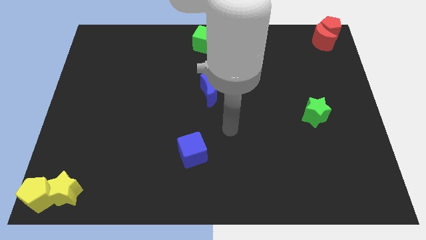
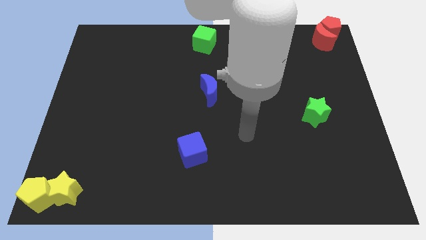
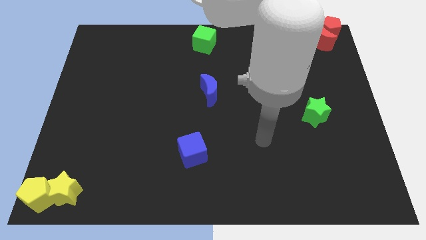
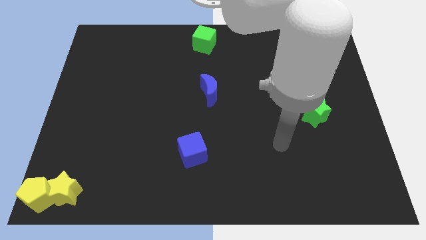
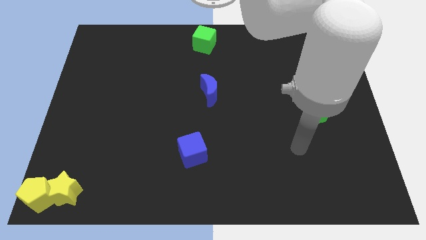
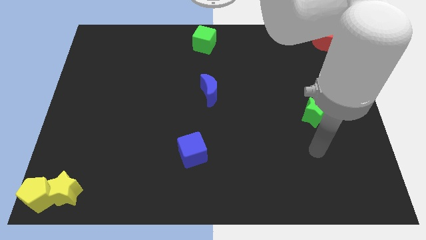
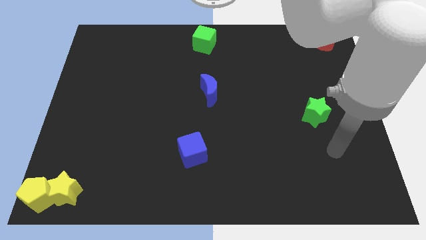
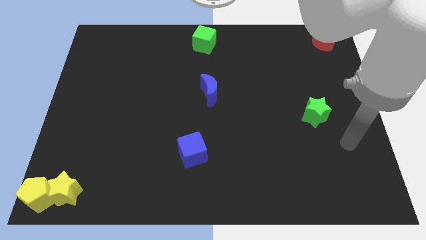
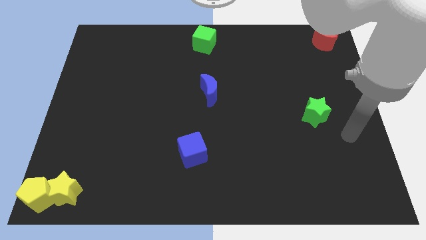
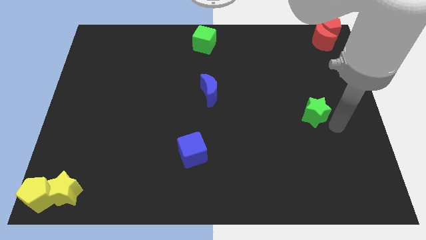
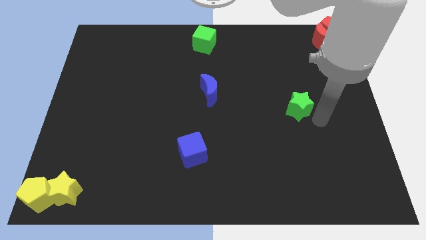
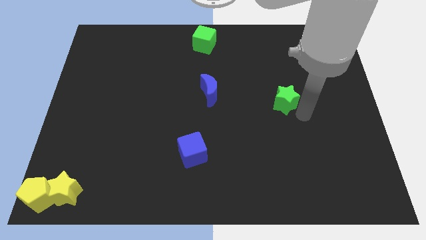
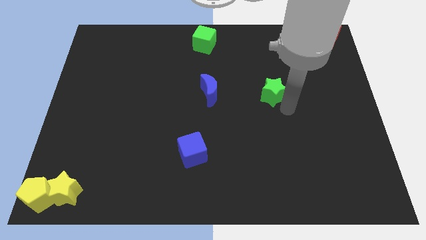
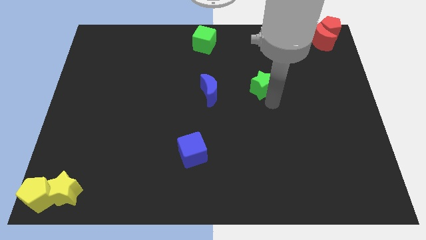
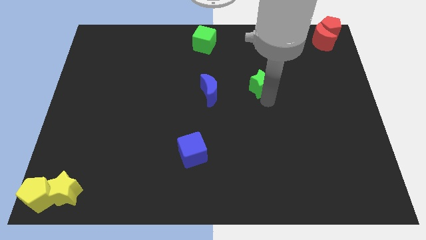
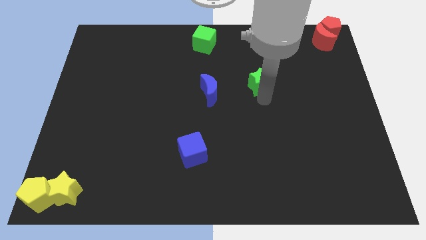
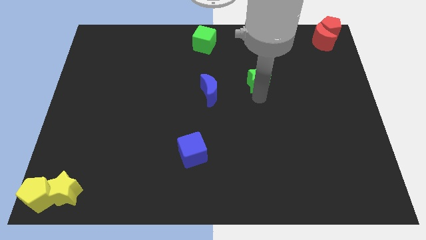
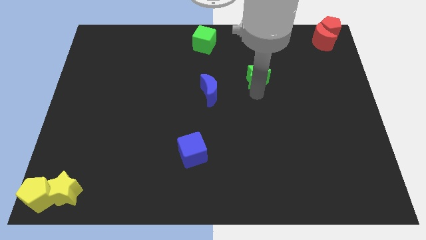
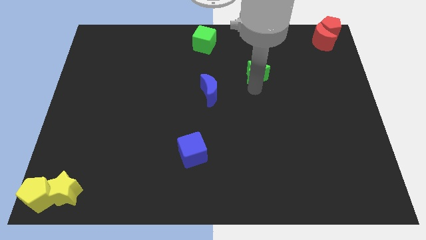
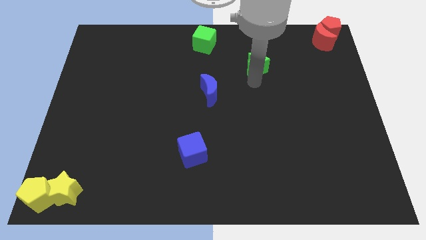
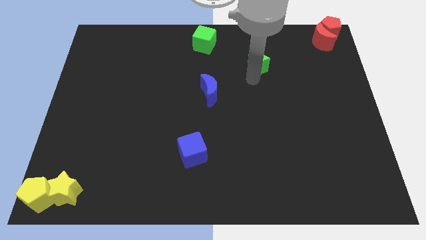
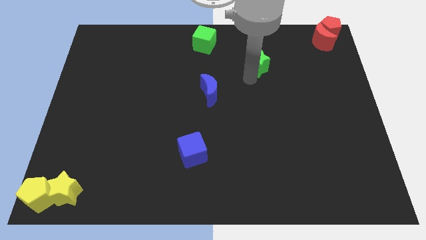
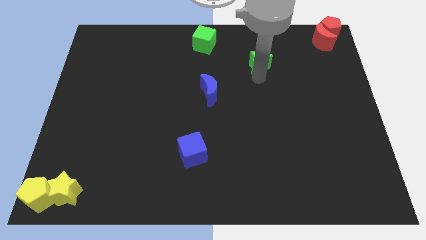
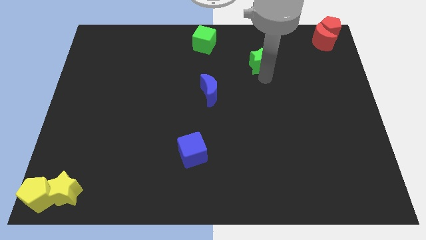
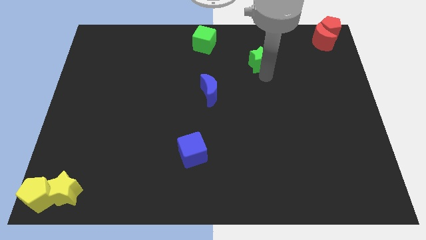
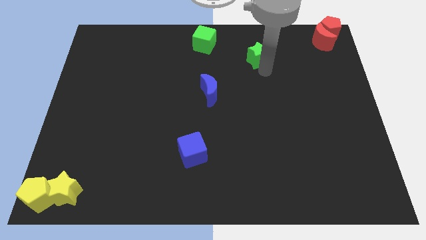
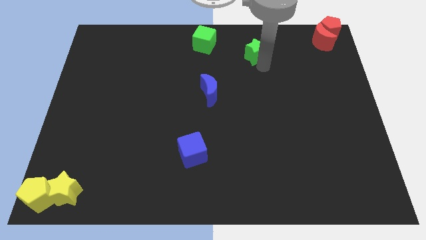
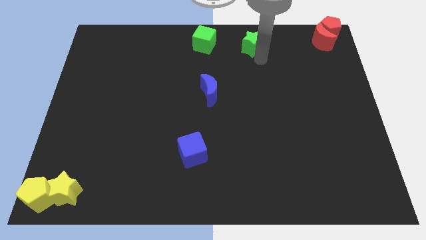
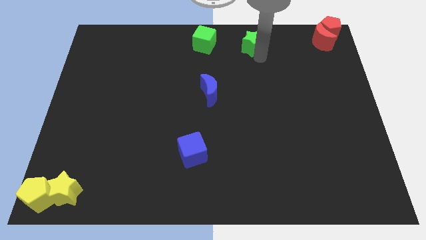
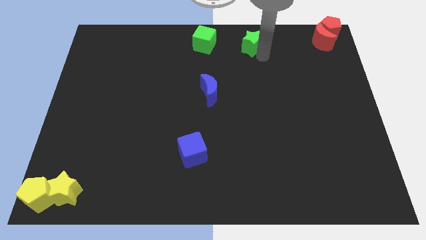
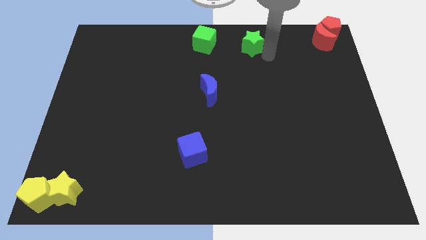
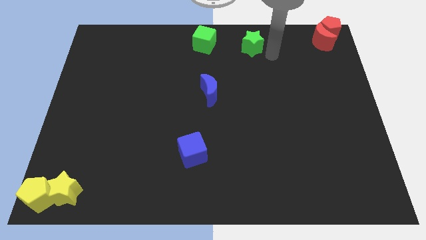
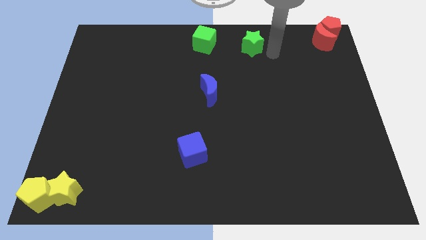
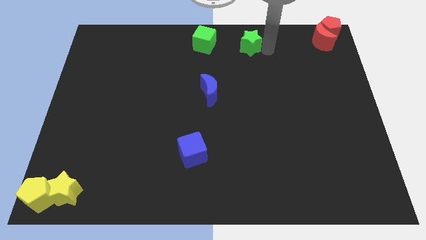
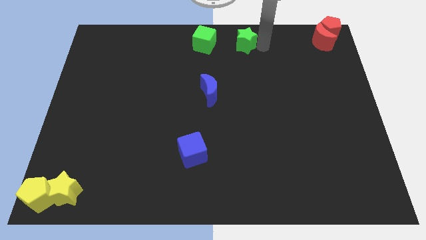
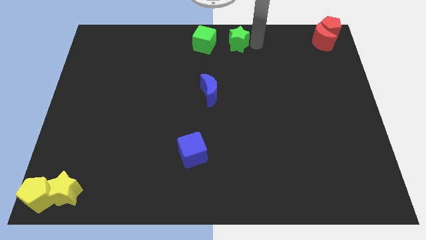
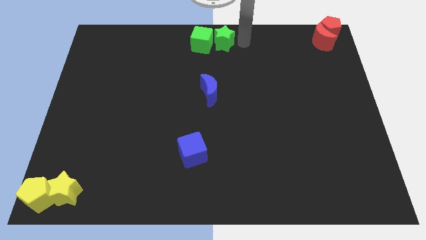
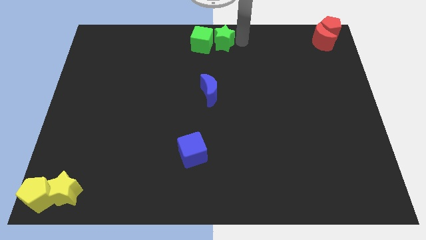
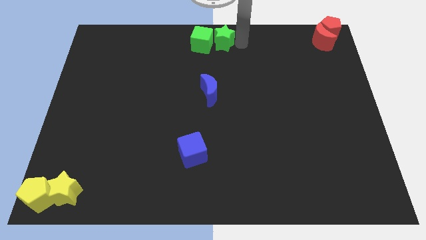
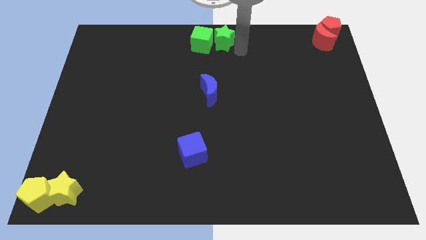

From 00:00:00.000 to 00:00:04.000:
move the green star to the right of the green cube

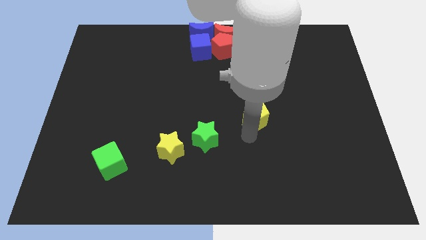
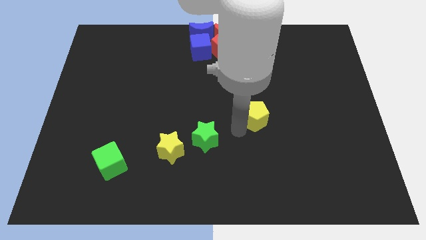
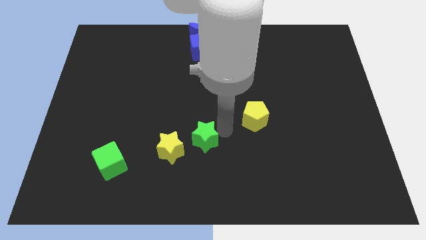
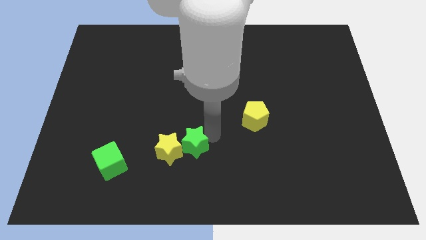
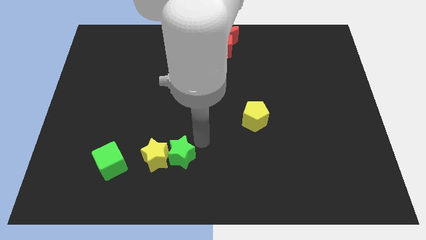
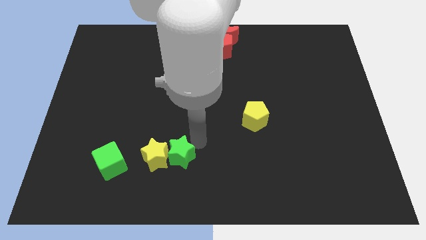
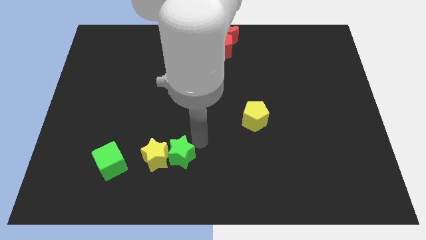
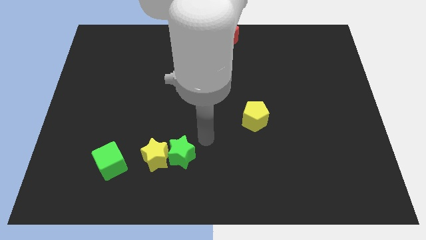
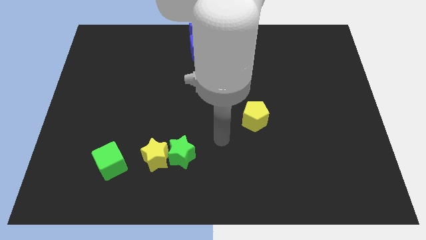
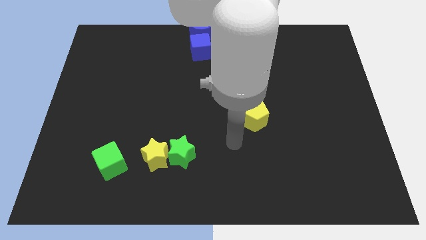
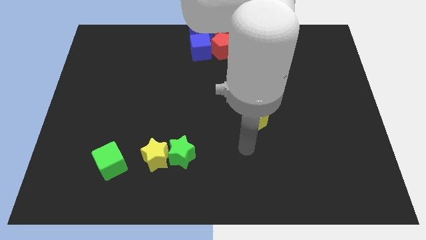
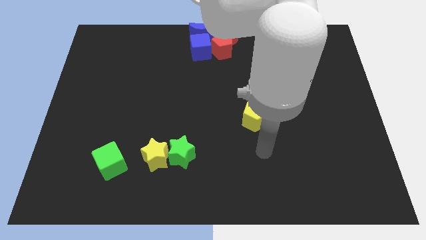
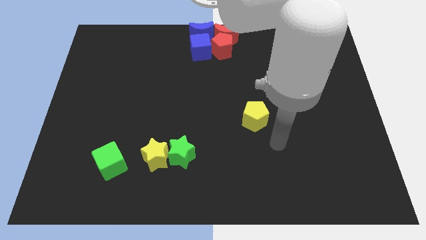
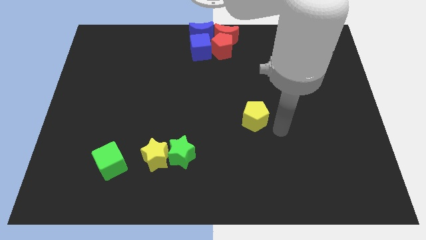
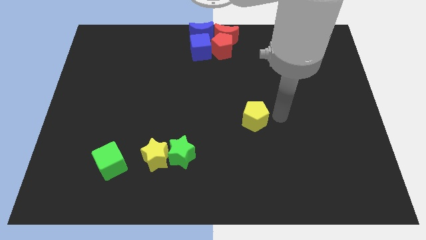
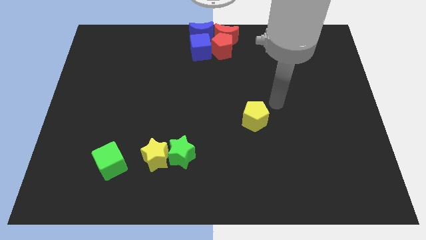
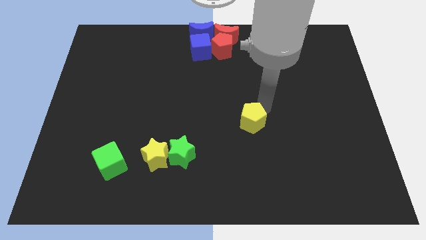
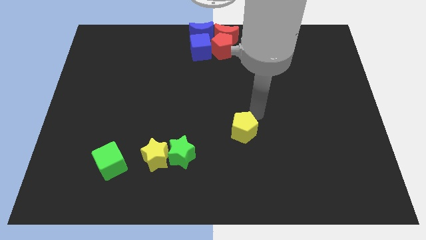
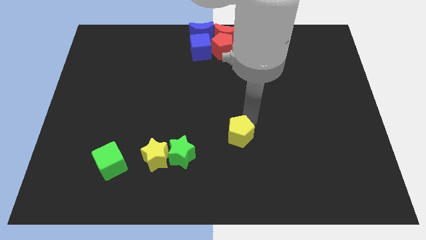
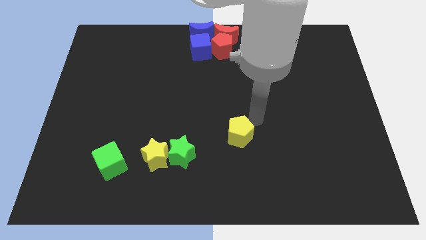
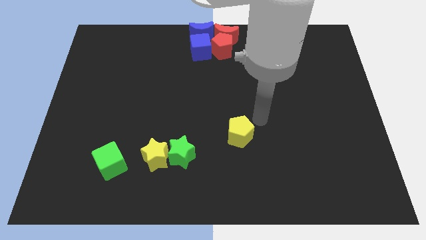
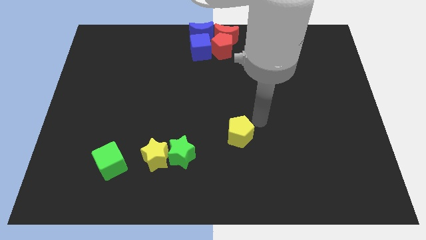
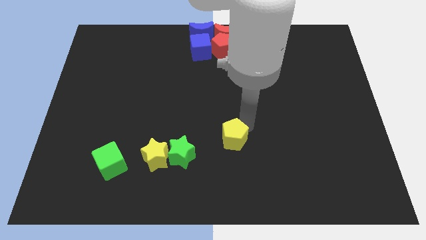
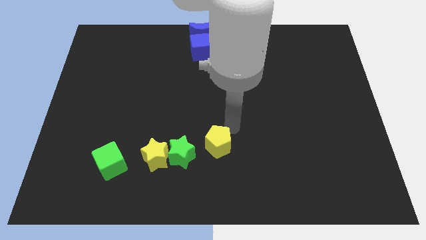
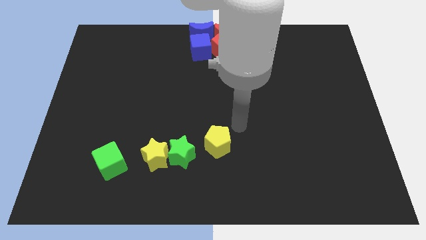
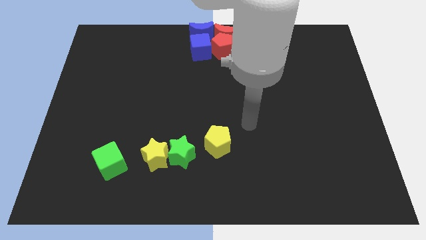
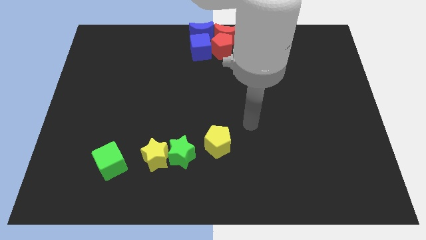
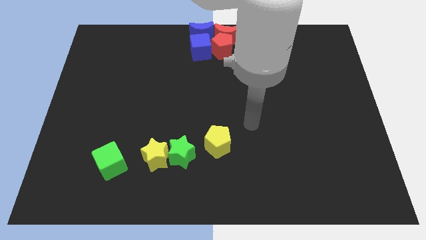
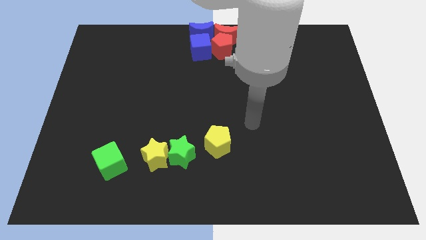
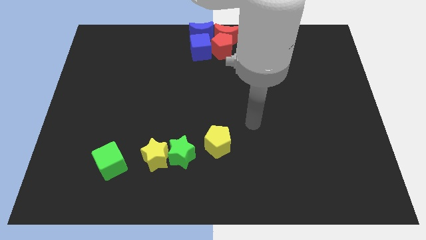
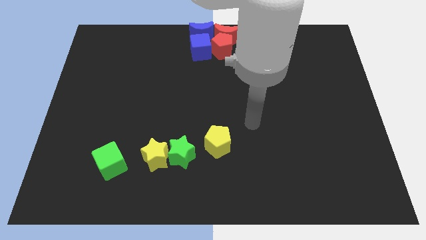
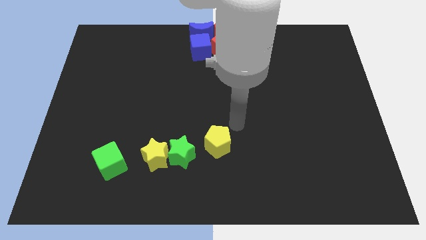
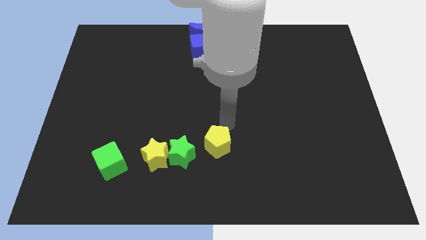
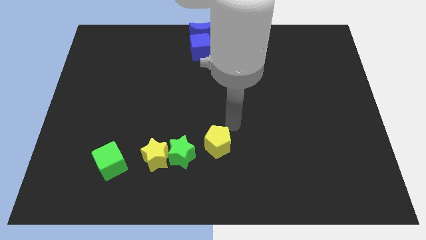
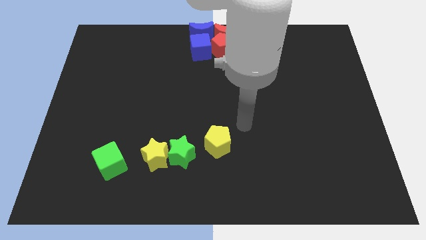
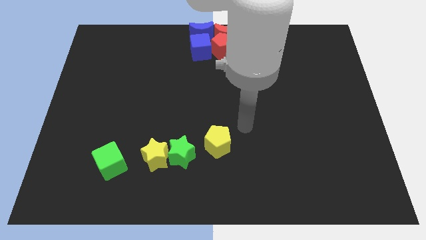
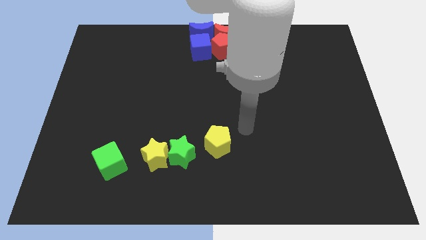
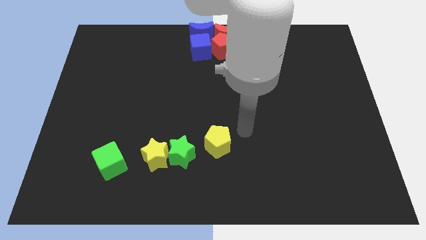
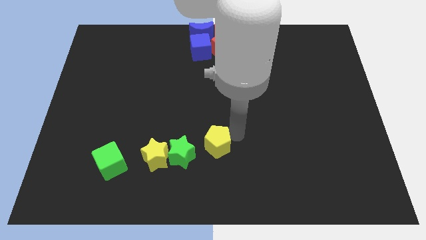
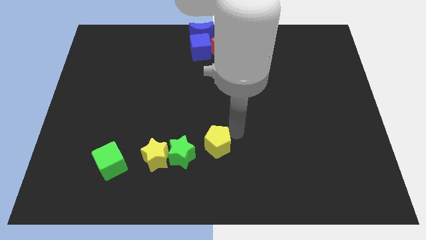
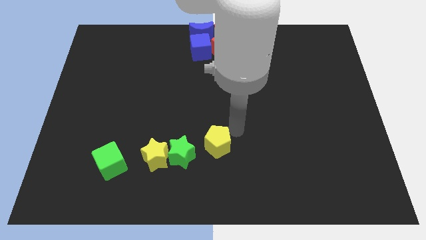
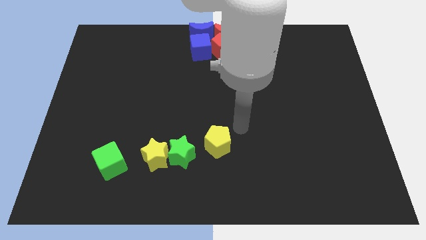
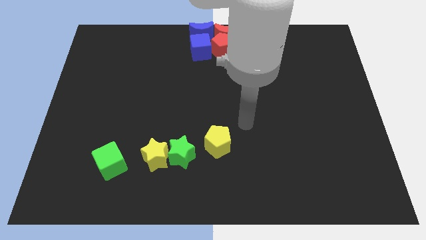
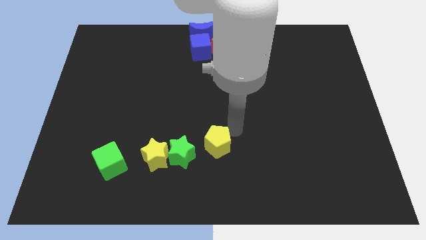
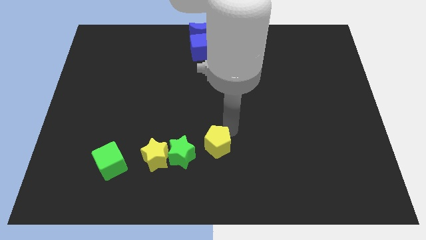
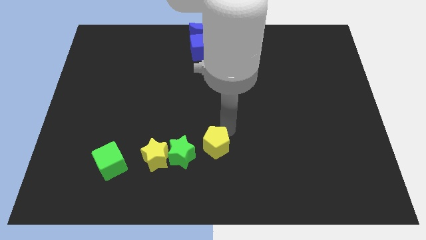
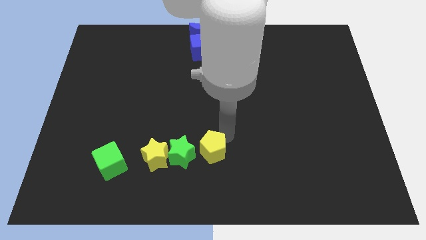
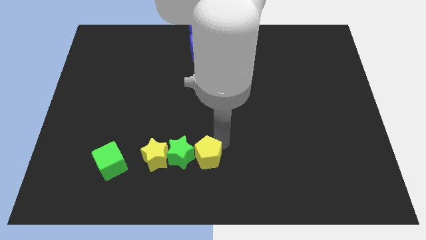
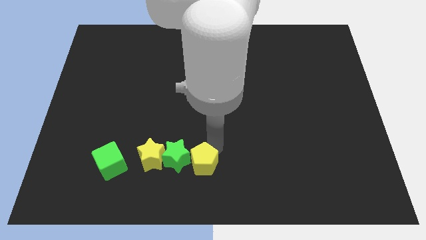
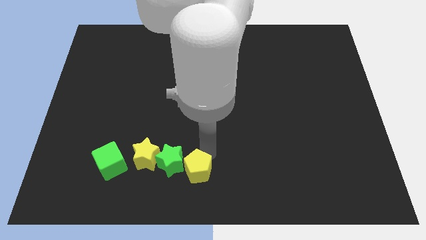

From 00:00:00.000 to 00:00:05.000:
move the yellow pentagon to the right of the green star

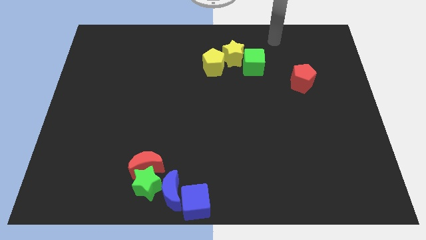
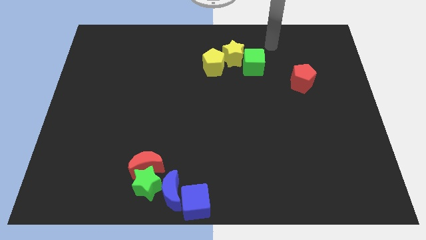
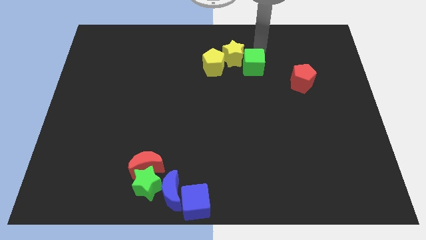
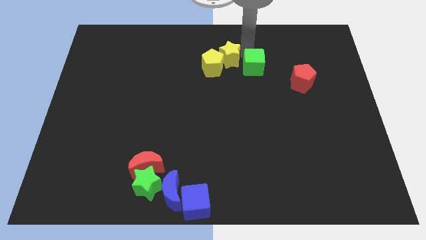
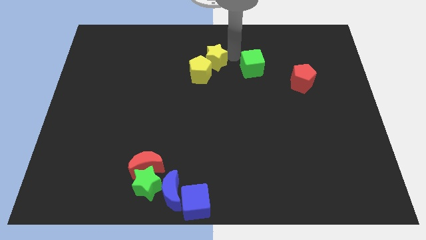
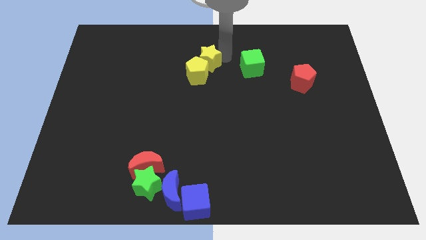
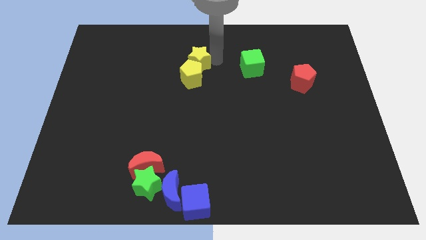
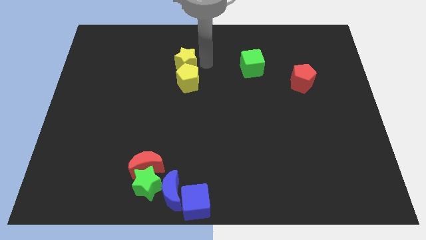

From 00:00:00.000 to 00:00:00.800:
push the yellow star along with the yellow penatgon toewards the left of the board
